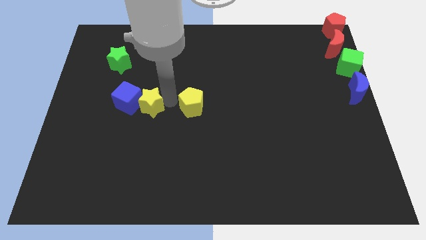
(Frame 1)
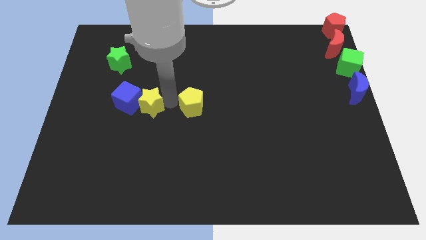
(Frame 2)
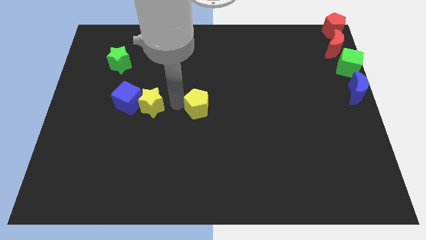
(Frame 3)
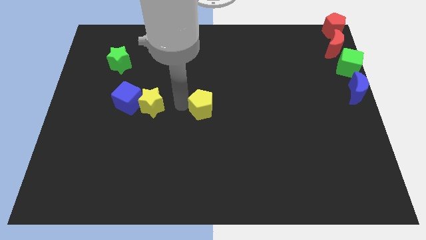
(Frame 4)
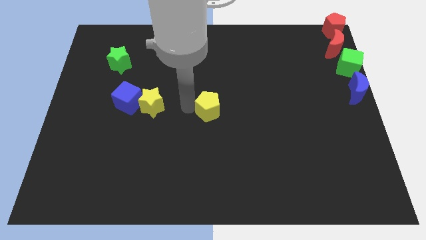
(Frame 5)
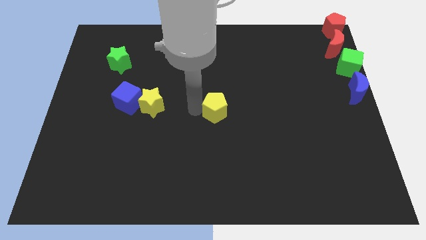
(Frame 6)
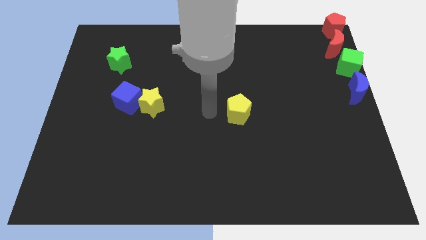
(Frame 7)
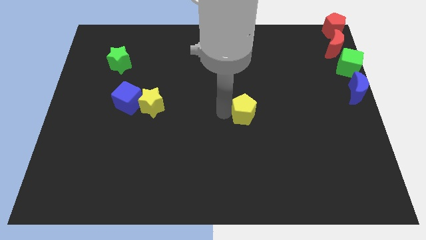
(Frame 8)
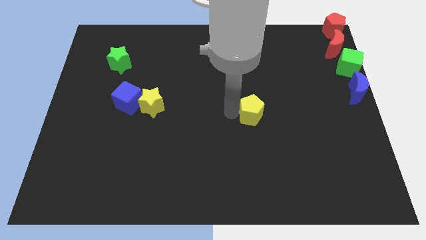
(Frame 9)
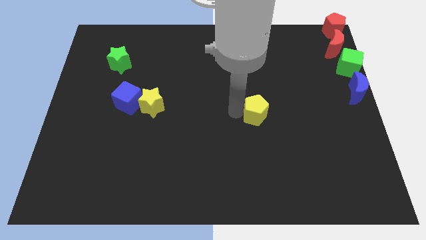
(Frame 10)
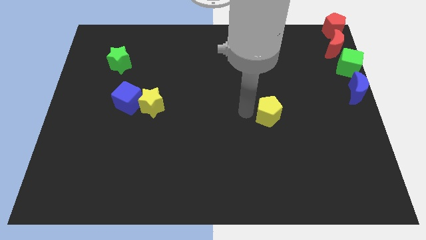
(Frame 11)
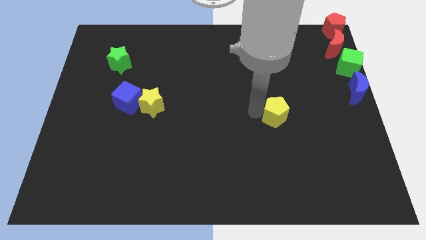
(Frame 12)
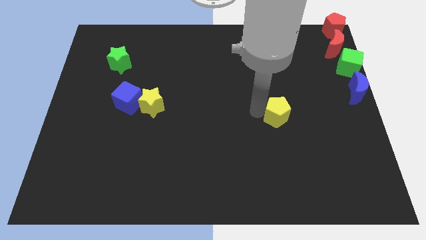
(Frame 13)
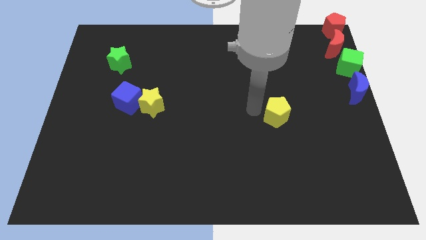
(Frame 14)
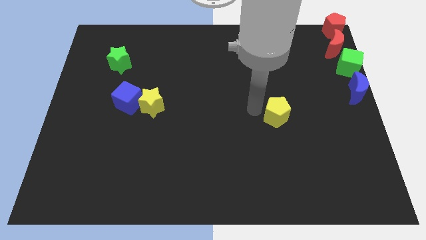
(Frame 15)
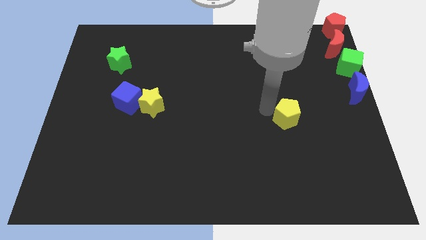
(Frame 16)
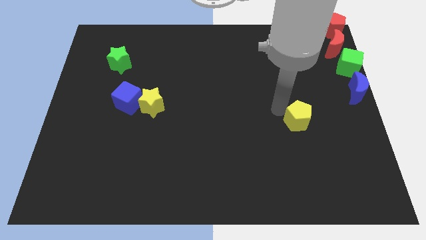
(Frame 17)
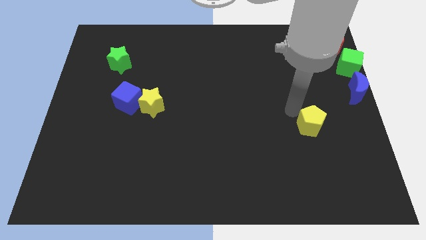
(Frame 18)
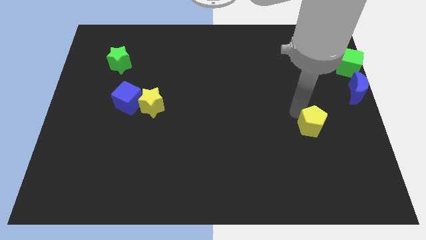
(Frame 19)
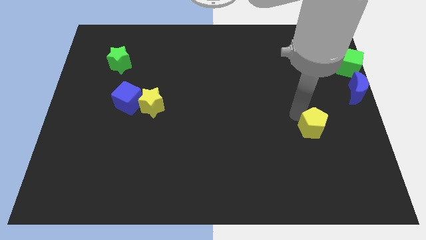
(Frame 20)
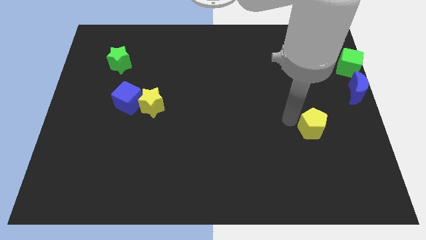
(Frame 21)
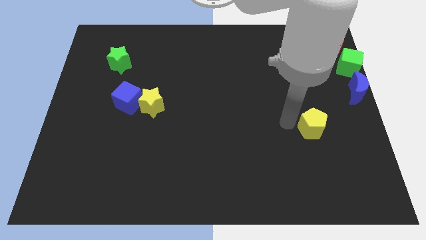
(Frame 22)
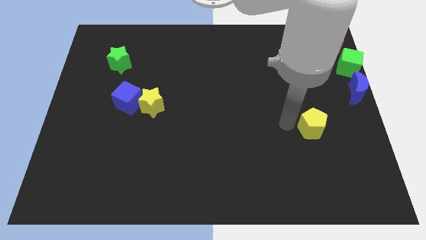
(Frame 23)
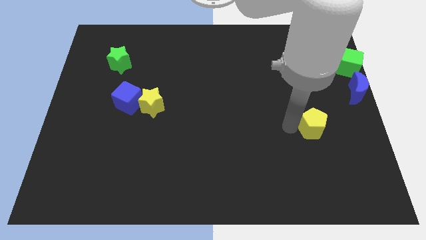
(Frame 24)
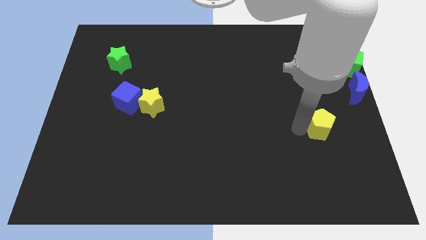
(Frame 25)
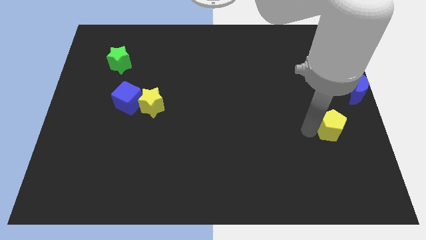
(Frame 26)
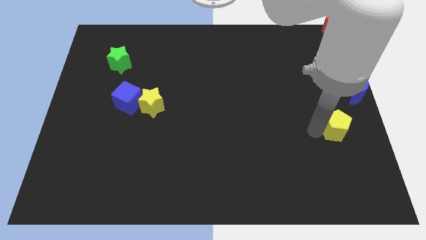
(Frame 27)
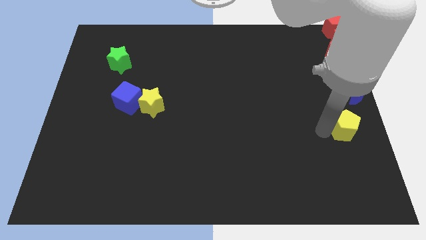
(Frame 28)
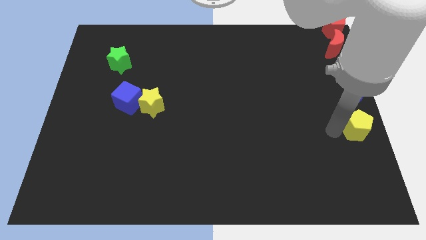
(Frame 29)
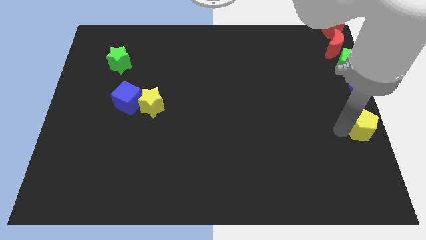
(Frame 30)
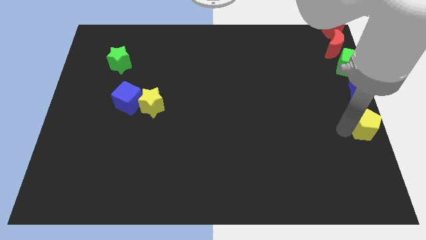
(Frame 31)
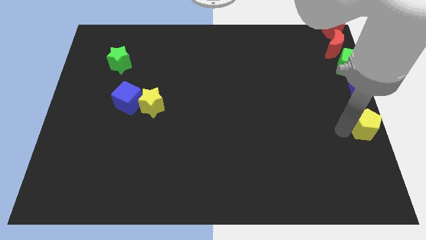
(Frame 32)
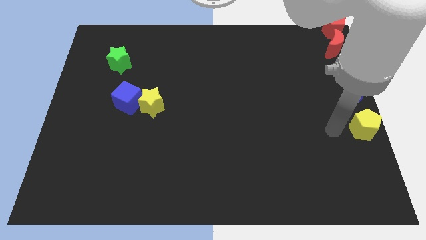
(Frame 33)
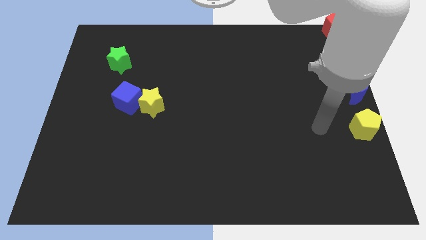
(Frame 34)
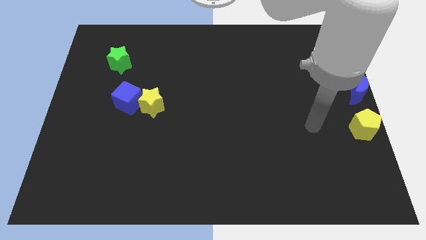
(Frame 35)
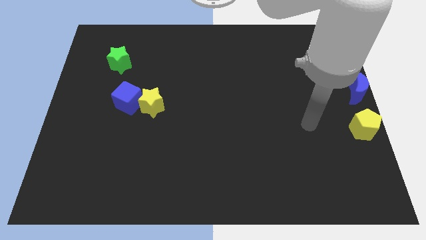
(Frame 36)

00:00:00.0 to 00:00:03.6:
move the yellow pentagon below the blue crescent

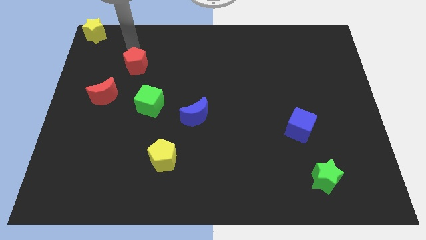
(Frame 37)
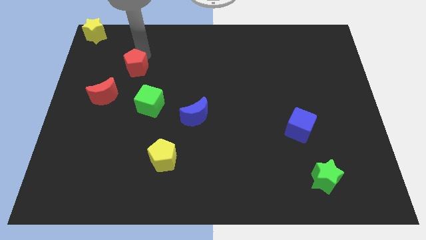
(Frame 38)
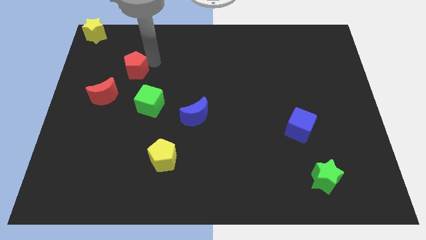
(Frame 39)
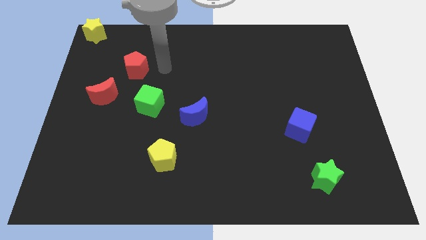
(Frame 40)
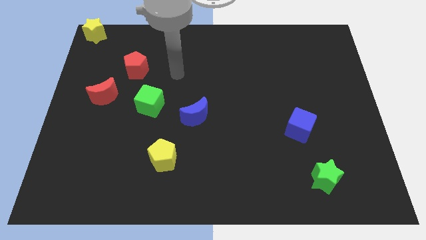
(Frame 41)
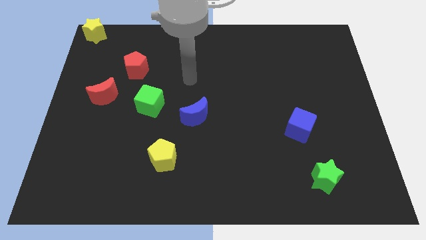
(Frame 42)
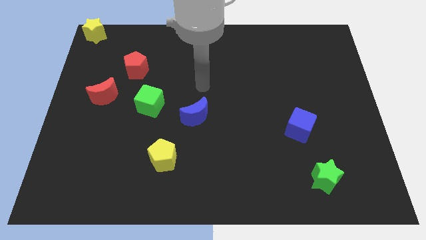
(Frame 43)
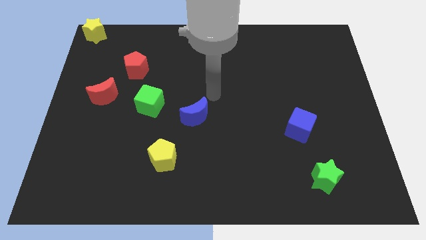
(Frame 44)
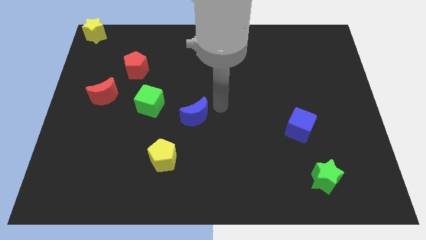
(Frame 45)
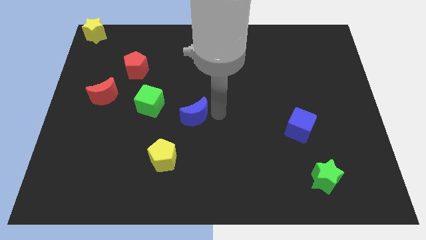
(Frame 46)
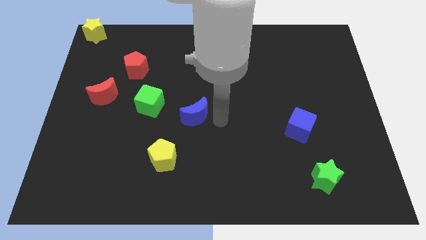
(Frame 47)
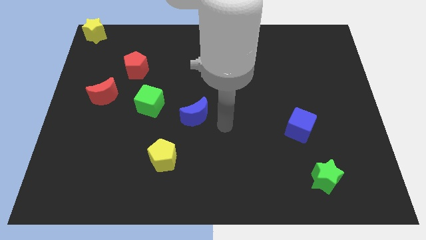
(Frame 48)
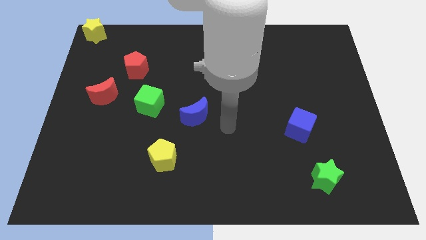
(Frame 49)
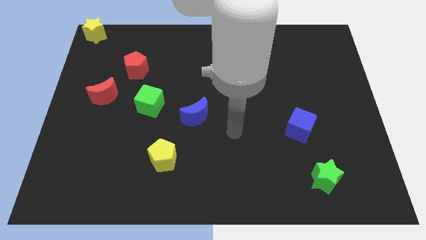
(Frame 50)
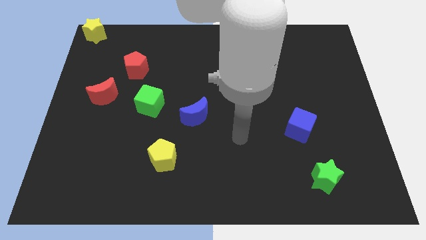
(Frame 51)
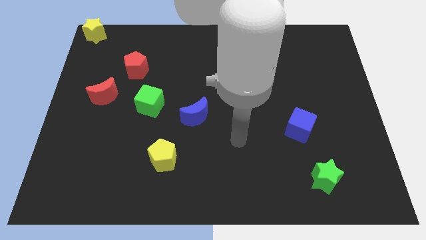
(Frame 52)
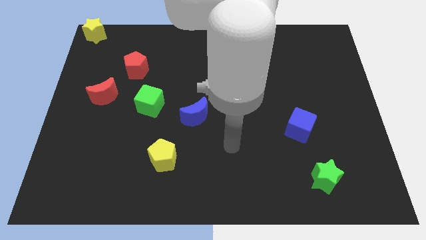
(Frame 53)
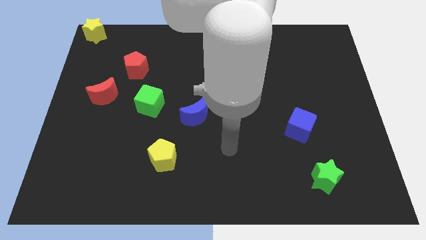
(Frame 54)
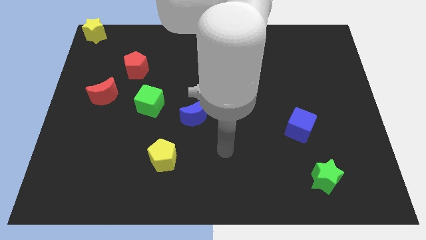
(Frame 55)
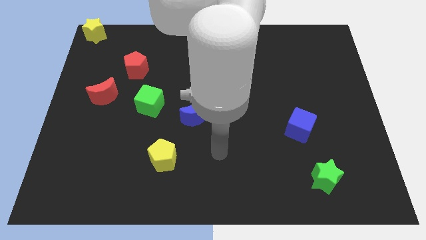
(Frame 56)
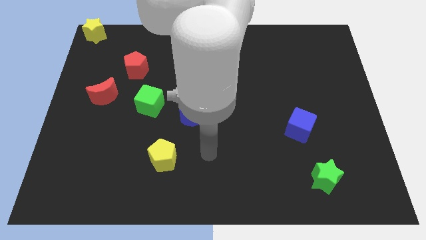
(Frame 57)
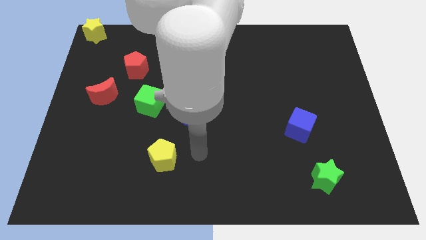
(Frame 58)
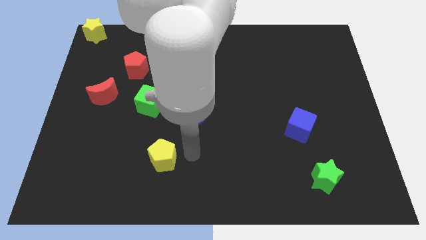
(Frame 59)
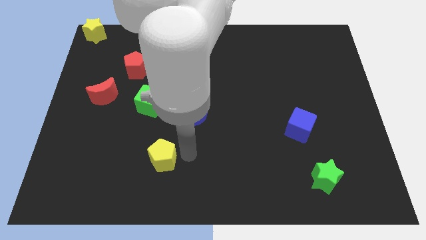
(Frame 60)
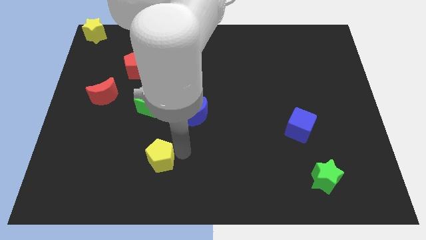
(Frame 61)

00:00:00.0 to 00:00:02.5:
move the arm away beside yellow pentagon

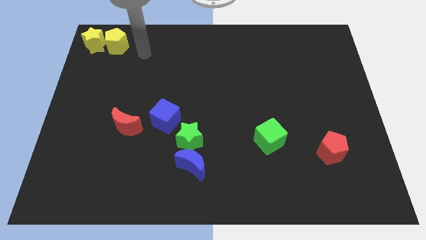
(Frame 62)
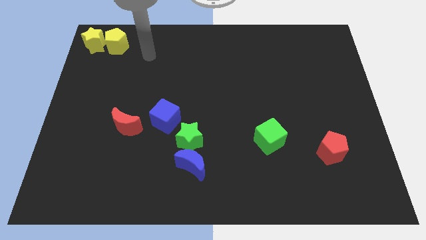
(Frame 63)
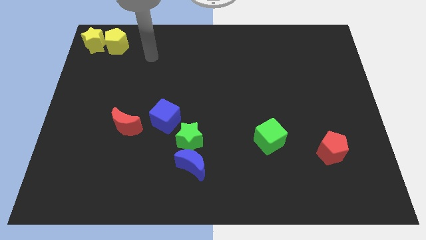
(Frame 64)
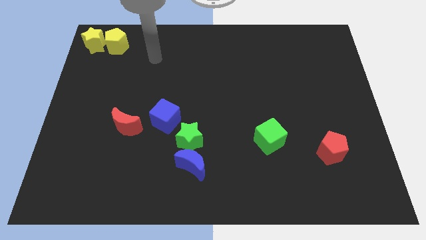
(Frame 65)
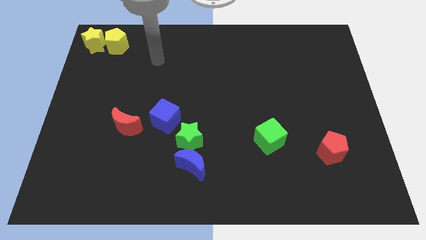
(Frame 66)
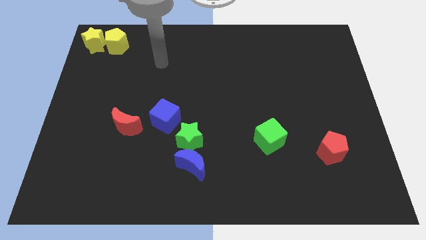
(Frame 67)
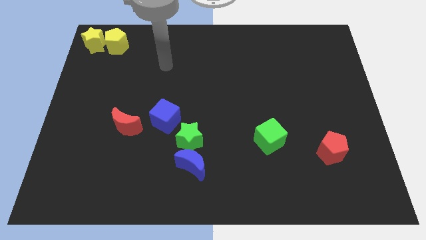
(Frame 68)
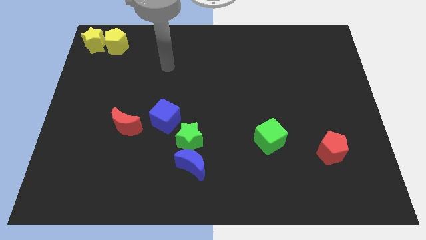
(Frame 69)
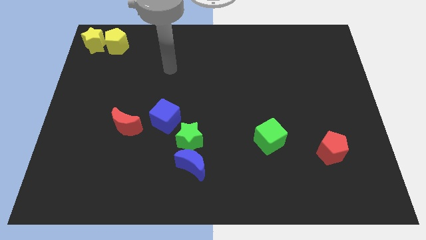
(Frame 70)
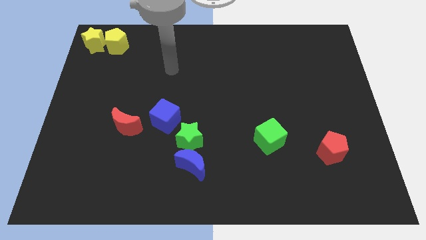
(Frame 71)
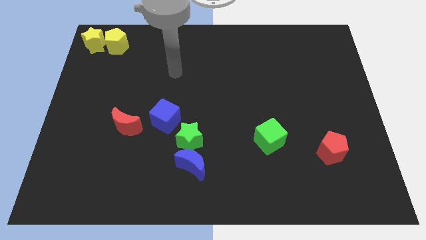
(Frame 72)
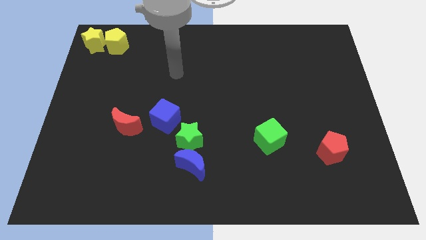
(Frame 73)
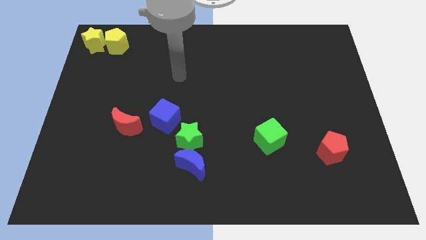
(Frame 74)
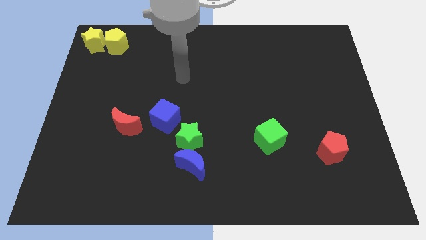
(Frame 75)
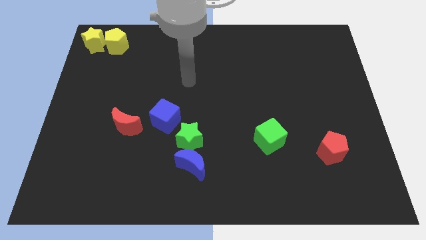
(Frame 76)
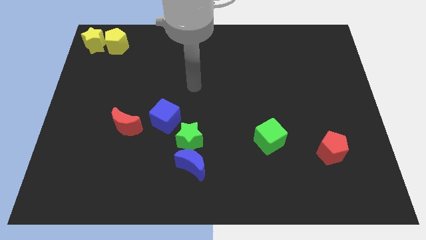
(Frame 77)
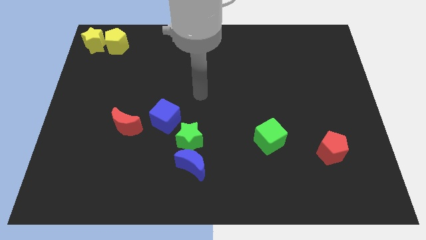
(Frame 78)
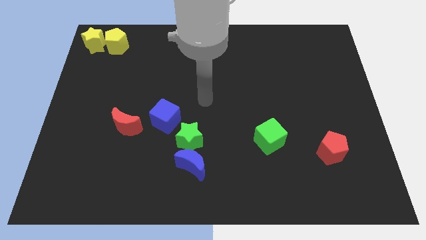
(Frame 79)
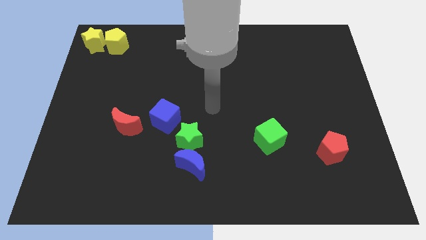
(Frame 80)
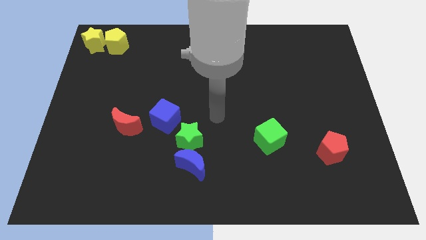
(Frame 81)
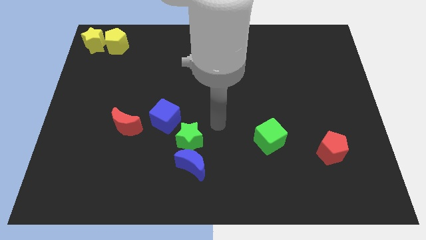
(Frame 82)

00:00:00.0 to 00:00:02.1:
move your arm to the center of the board

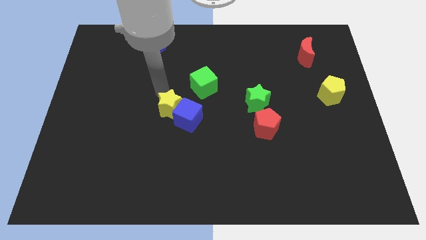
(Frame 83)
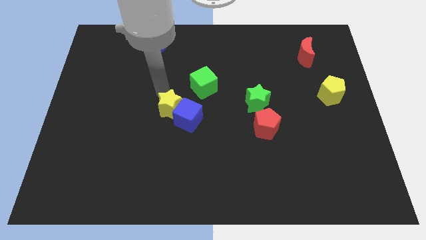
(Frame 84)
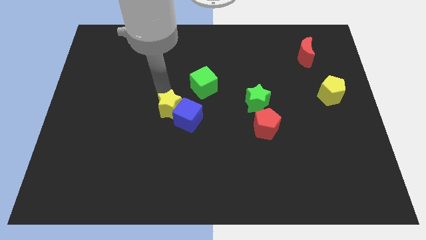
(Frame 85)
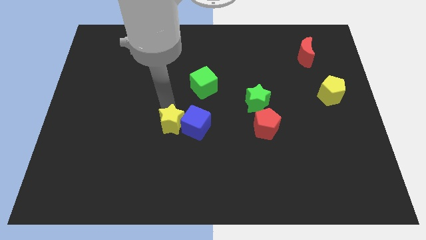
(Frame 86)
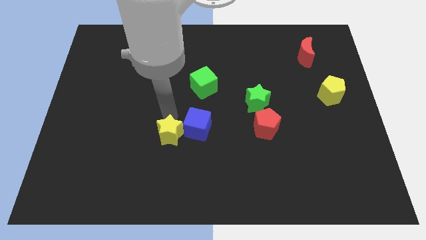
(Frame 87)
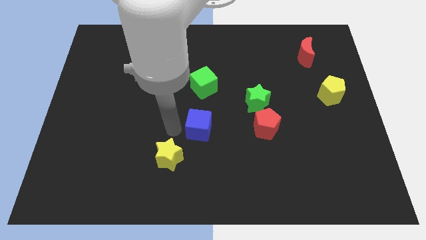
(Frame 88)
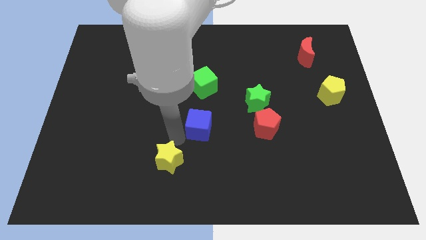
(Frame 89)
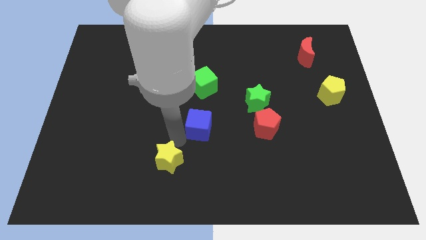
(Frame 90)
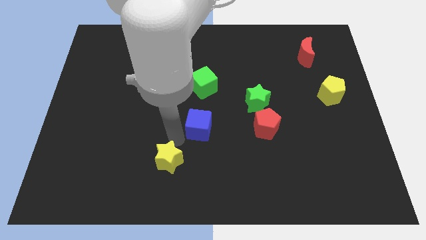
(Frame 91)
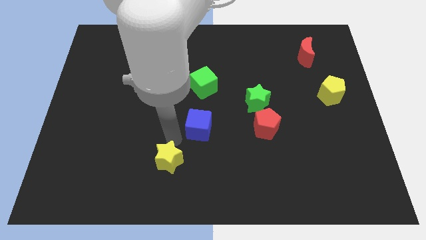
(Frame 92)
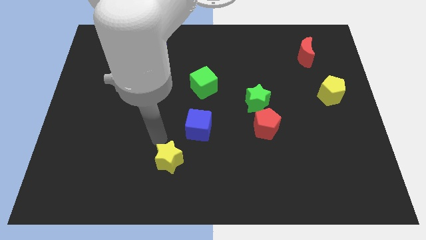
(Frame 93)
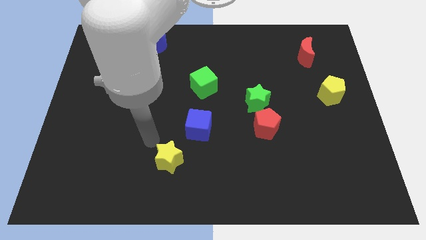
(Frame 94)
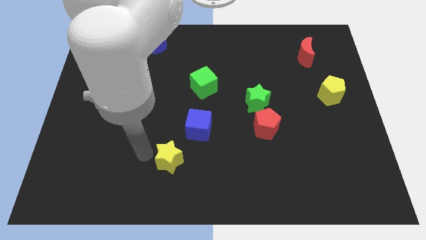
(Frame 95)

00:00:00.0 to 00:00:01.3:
move the yellow star towards the bottom center
